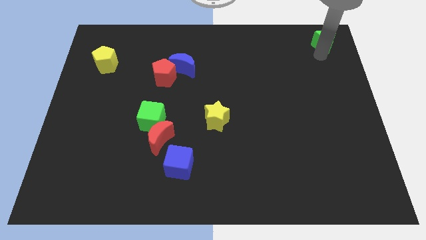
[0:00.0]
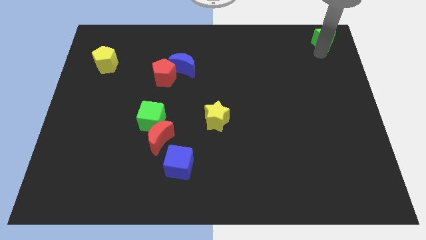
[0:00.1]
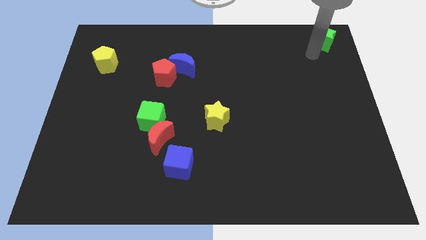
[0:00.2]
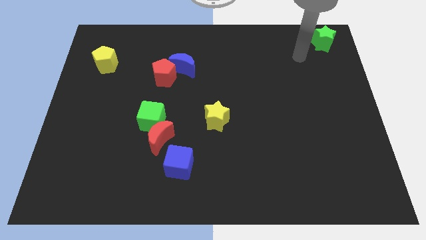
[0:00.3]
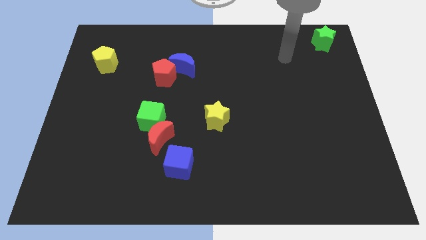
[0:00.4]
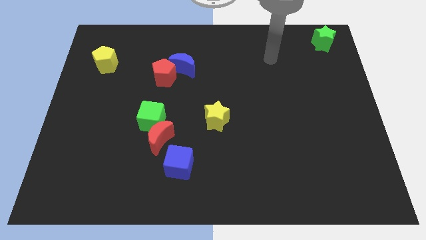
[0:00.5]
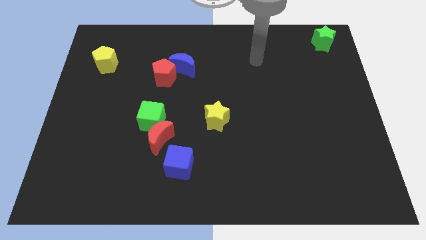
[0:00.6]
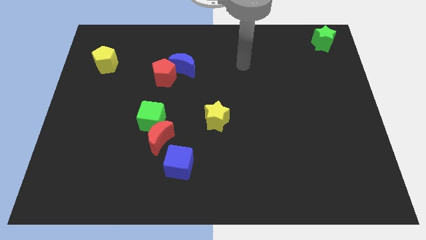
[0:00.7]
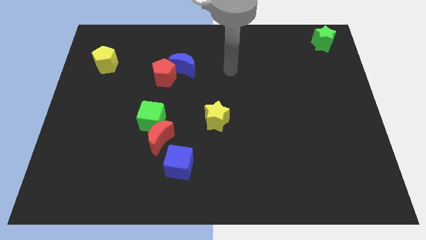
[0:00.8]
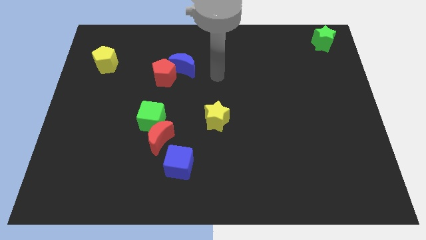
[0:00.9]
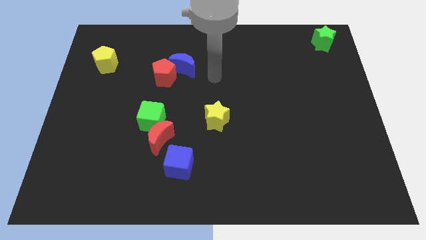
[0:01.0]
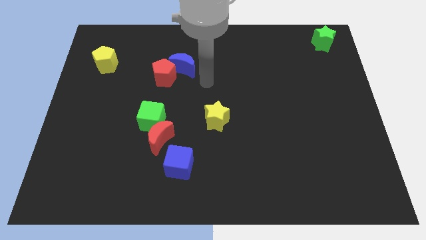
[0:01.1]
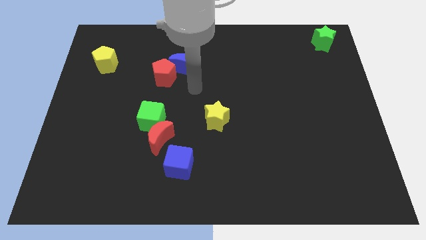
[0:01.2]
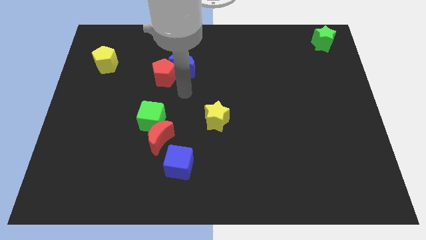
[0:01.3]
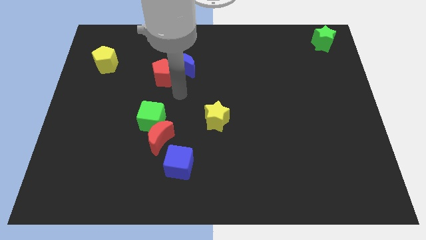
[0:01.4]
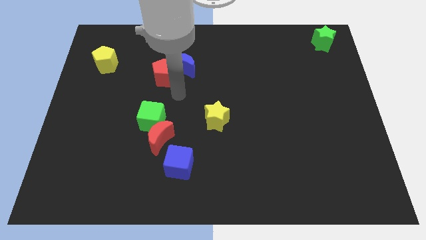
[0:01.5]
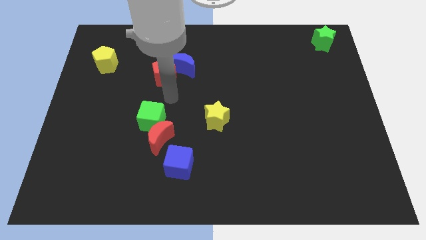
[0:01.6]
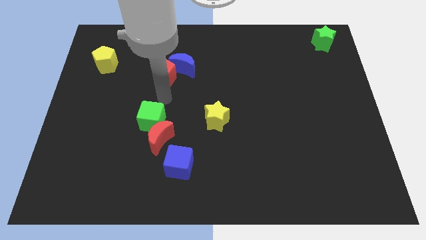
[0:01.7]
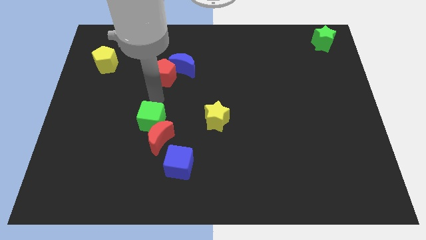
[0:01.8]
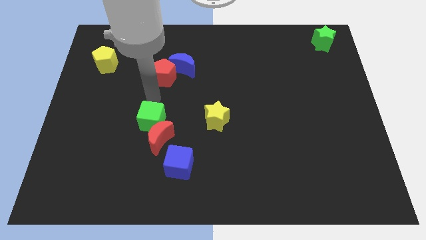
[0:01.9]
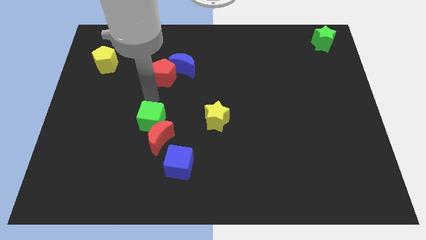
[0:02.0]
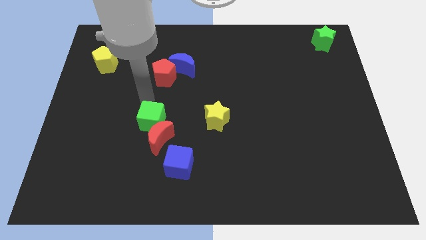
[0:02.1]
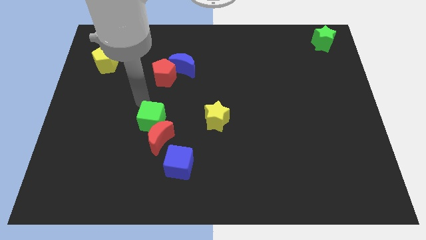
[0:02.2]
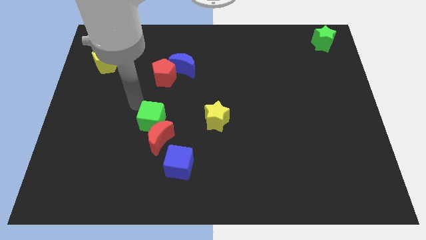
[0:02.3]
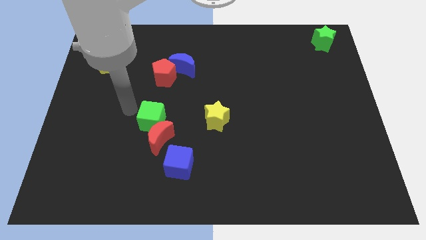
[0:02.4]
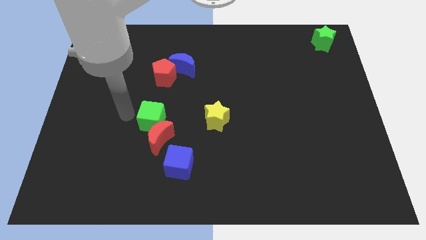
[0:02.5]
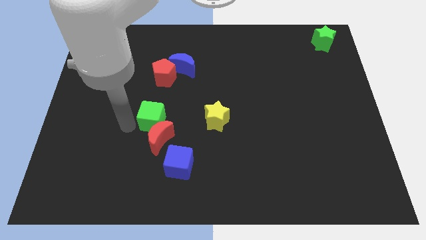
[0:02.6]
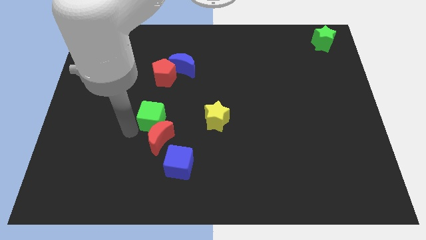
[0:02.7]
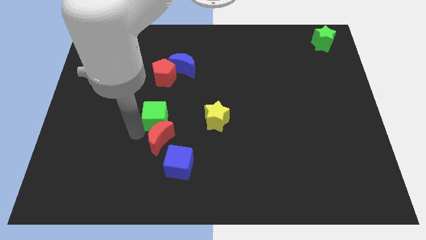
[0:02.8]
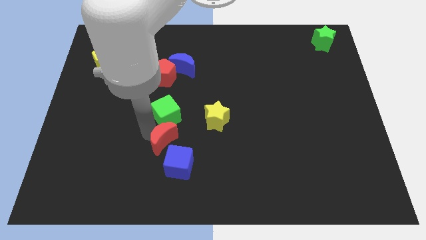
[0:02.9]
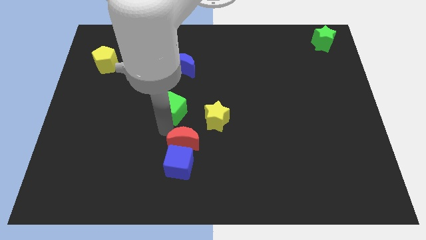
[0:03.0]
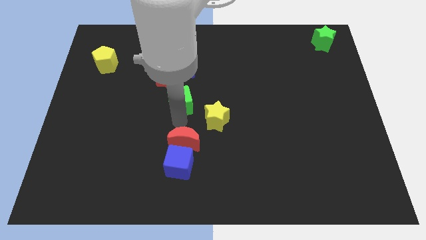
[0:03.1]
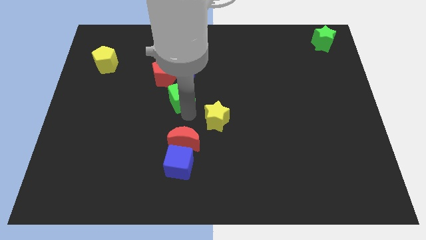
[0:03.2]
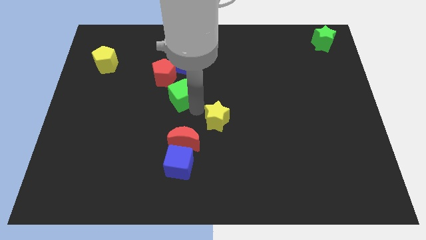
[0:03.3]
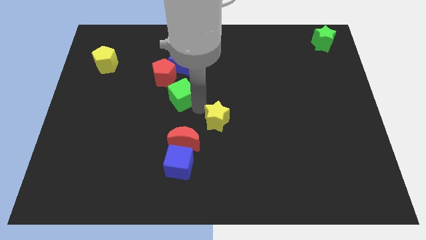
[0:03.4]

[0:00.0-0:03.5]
move the arm away from the green star

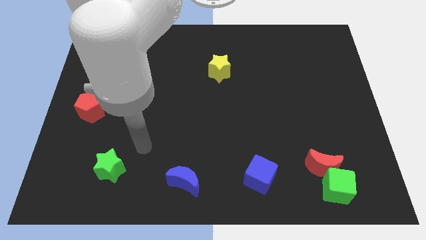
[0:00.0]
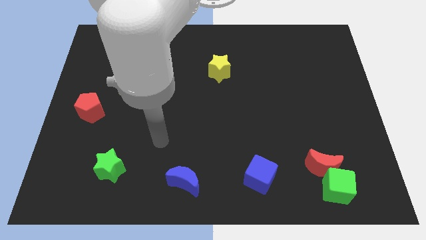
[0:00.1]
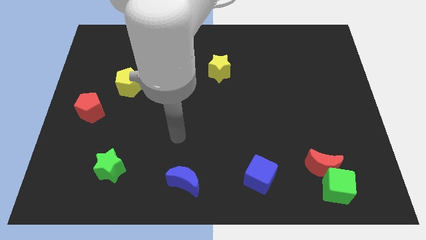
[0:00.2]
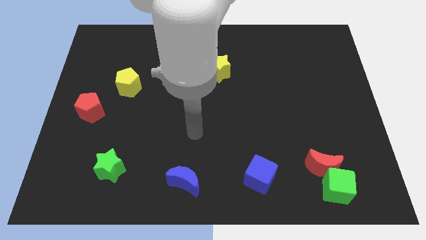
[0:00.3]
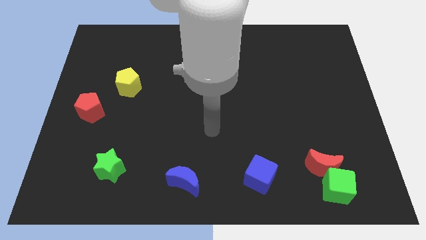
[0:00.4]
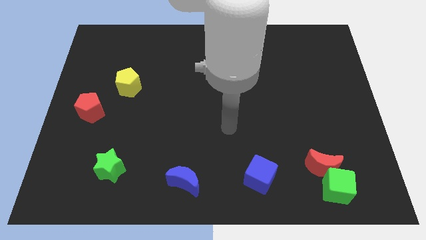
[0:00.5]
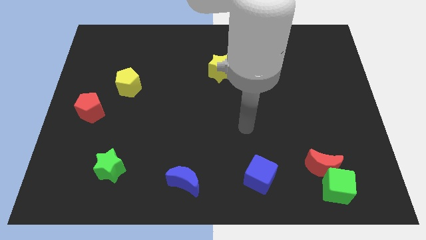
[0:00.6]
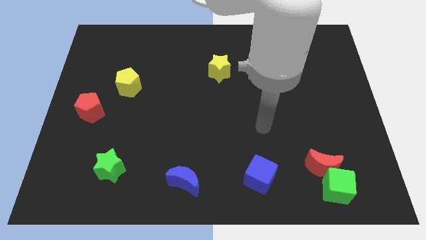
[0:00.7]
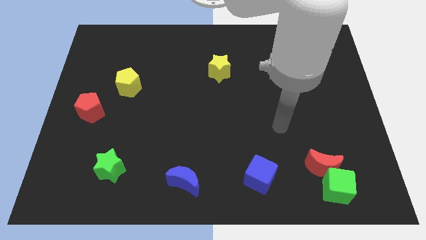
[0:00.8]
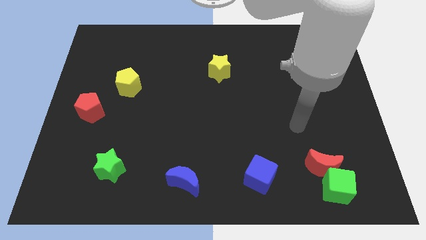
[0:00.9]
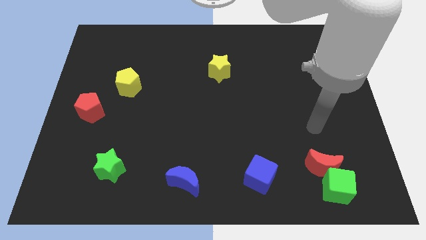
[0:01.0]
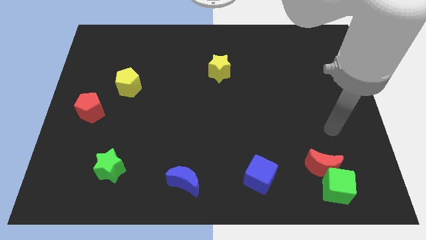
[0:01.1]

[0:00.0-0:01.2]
place your hand above the group of blocks

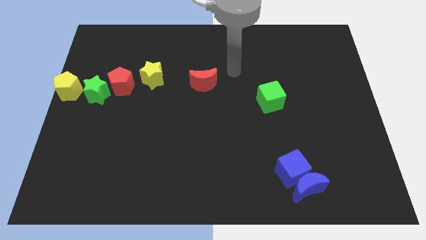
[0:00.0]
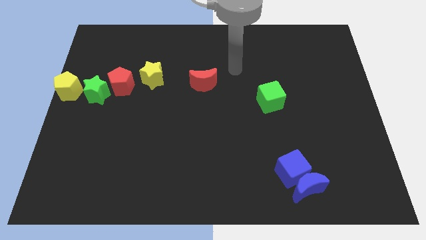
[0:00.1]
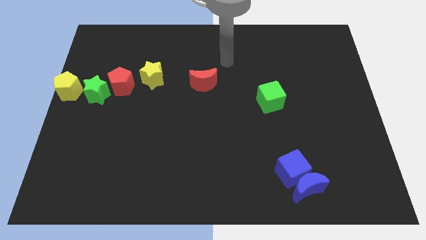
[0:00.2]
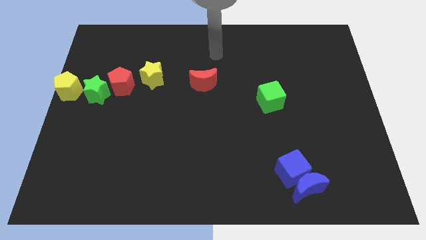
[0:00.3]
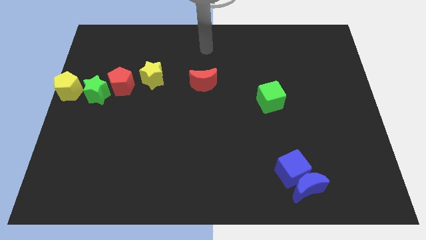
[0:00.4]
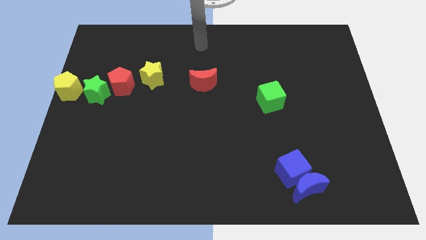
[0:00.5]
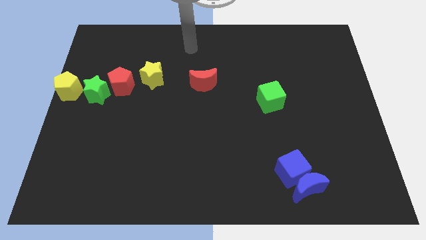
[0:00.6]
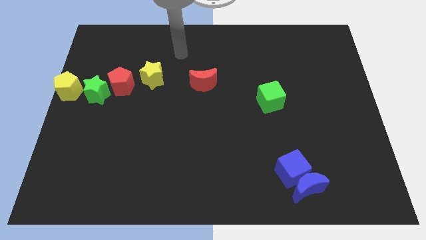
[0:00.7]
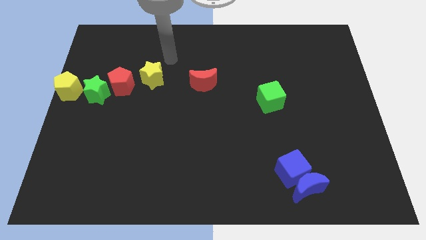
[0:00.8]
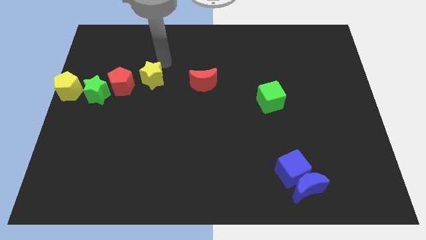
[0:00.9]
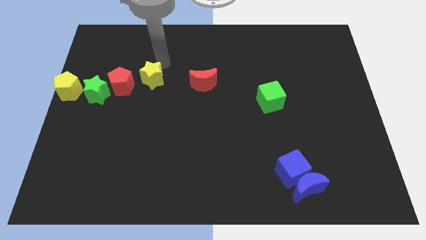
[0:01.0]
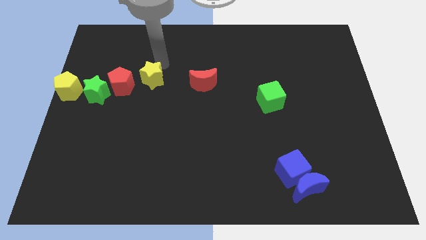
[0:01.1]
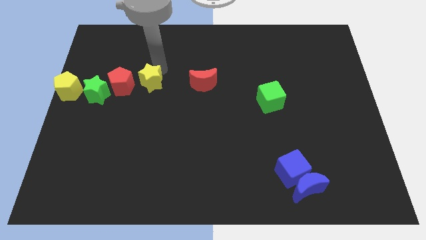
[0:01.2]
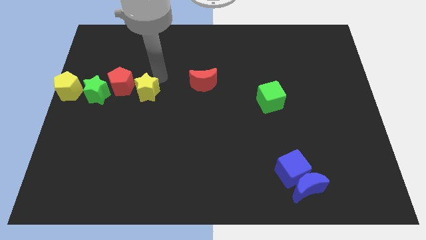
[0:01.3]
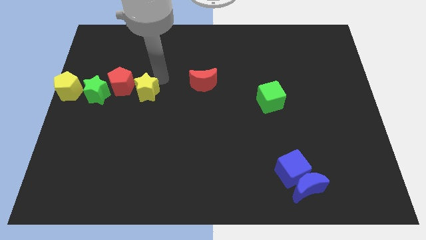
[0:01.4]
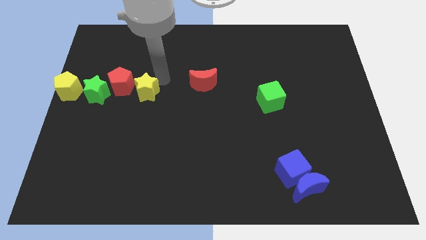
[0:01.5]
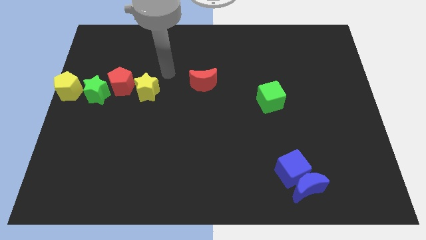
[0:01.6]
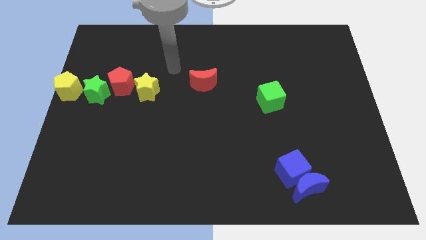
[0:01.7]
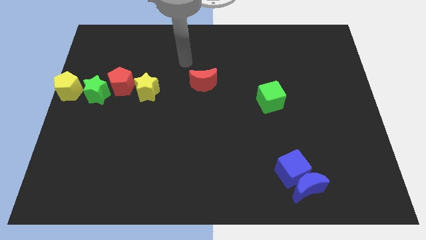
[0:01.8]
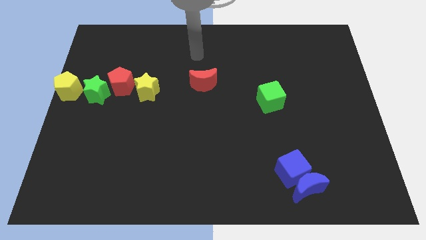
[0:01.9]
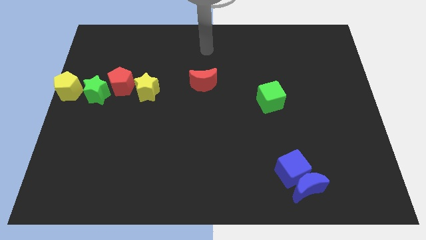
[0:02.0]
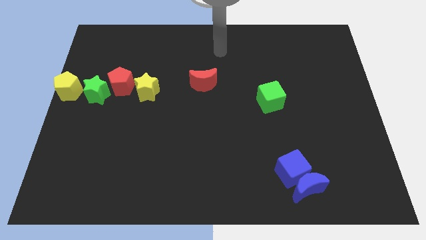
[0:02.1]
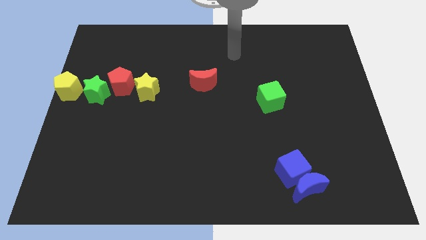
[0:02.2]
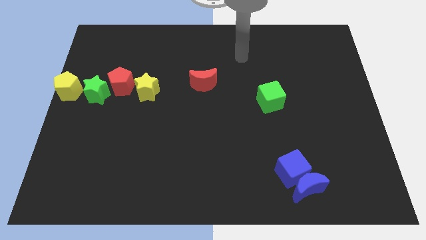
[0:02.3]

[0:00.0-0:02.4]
move the yellow star slightly to the bottom

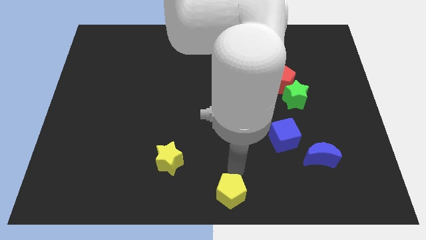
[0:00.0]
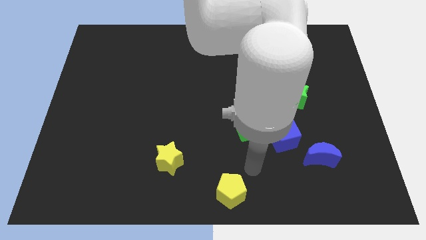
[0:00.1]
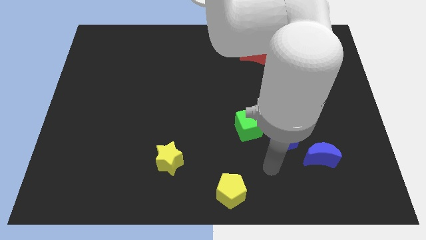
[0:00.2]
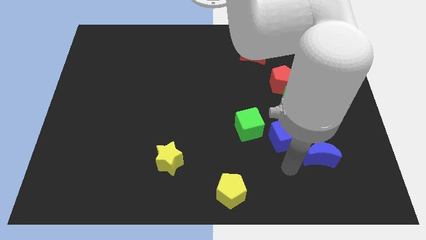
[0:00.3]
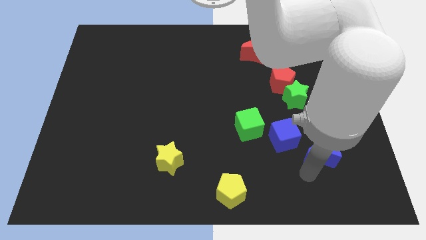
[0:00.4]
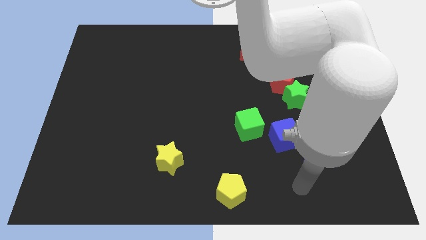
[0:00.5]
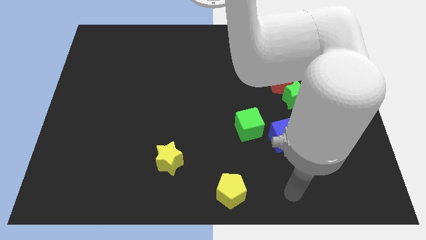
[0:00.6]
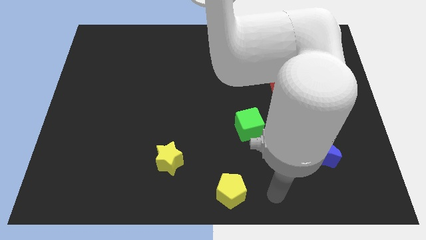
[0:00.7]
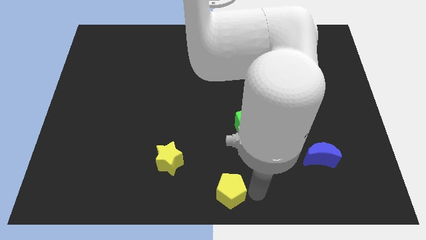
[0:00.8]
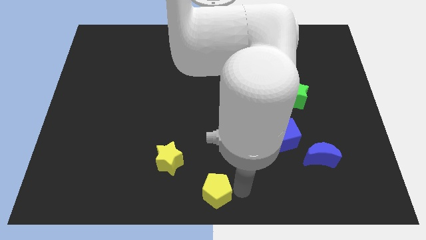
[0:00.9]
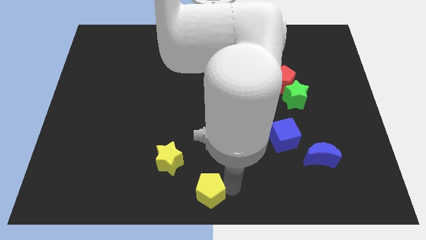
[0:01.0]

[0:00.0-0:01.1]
place the yellow pentagon diagonally bottom right to the yellow star

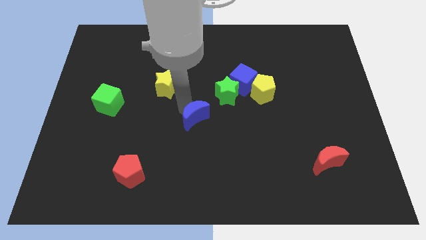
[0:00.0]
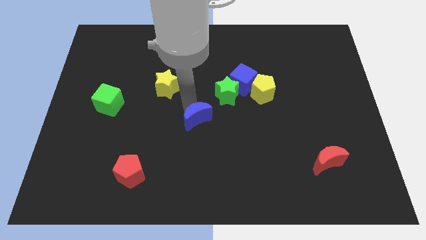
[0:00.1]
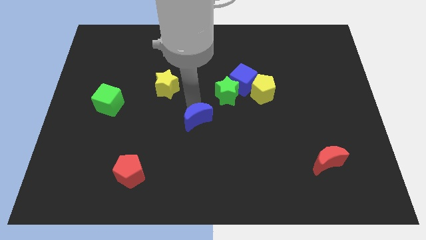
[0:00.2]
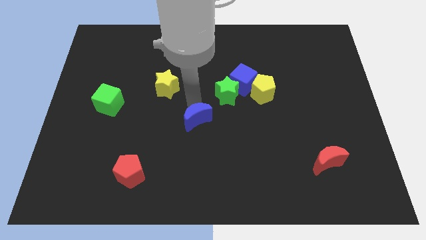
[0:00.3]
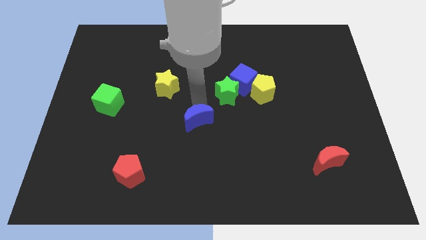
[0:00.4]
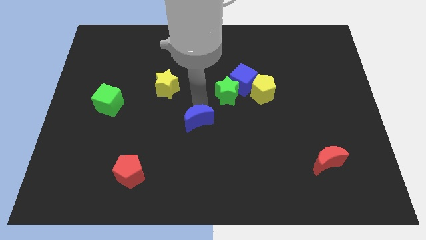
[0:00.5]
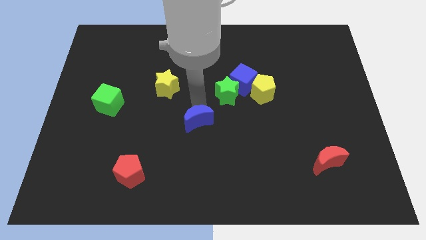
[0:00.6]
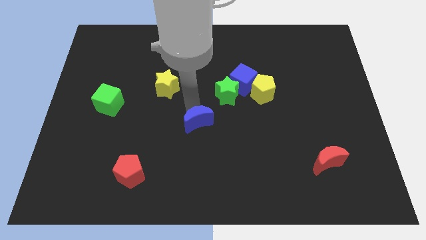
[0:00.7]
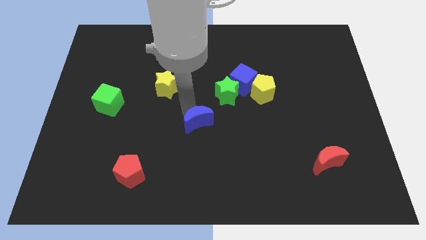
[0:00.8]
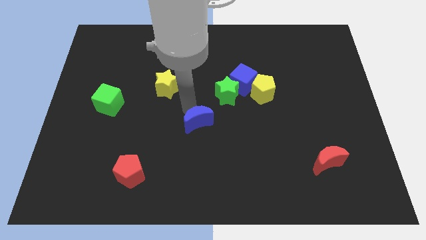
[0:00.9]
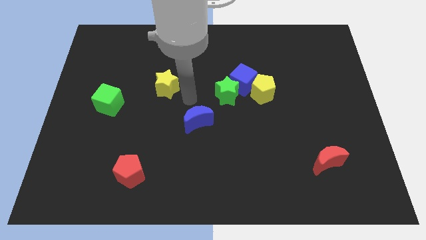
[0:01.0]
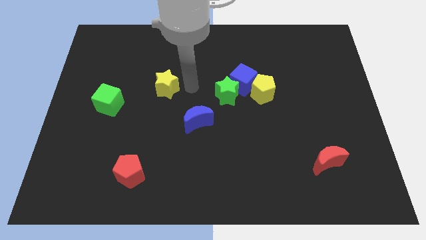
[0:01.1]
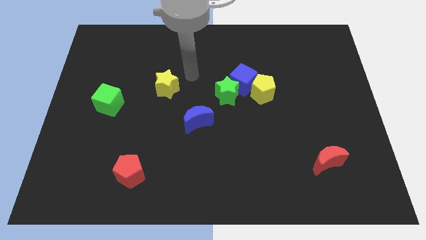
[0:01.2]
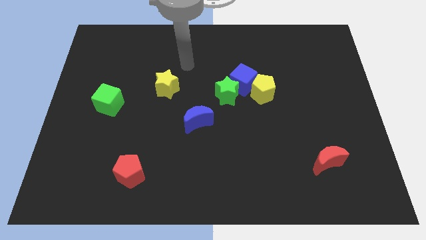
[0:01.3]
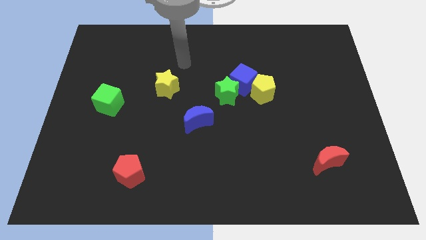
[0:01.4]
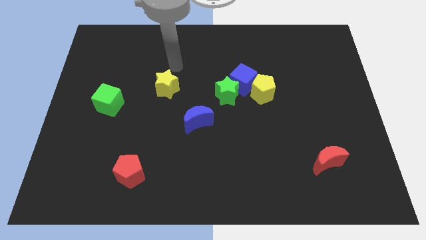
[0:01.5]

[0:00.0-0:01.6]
move the blue moon slightly towards the bottom
